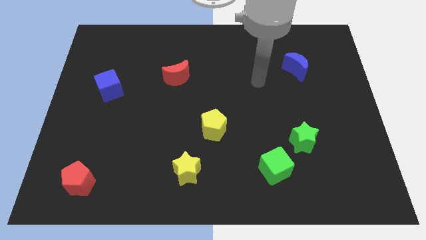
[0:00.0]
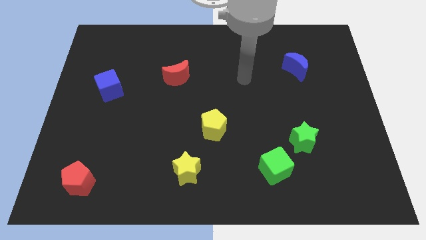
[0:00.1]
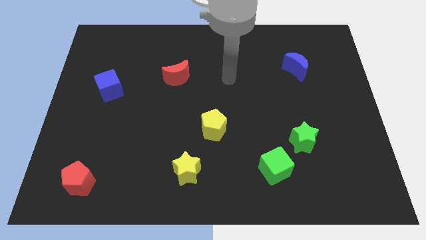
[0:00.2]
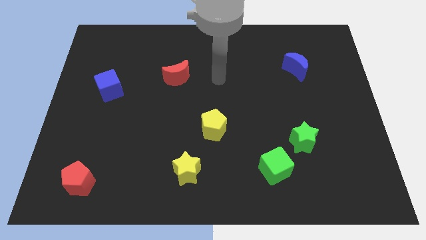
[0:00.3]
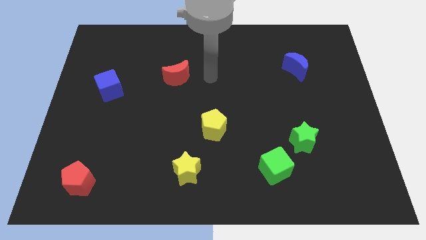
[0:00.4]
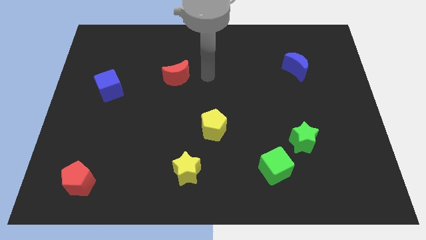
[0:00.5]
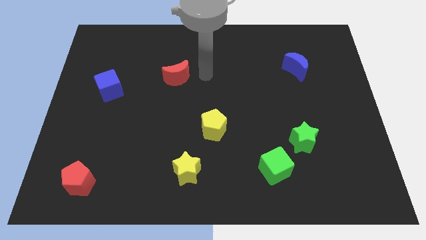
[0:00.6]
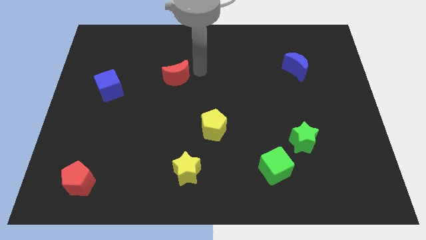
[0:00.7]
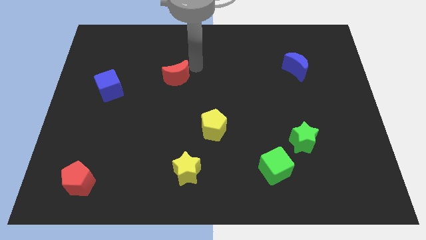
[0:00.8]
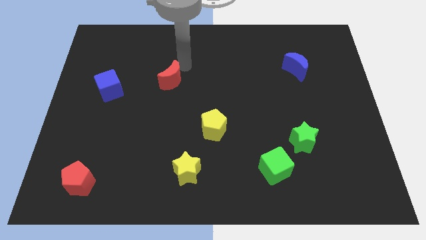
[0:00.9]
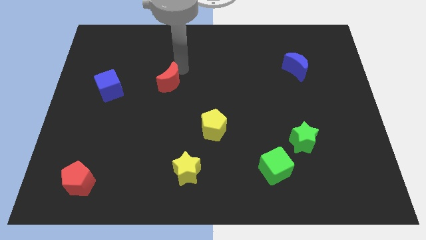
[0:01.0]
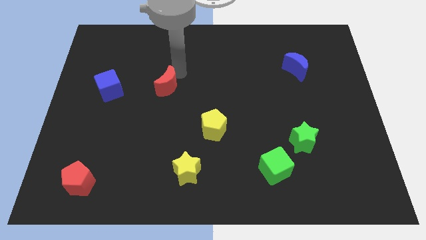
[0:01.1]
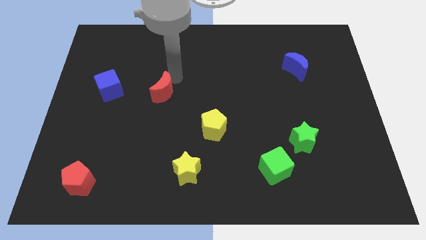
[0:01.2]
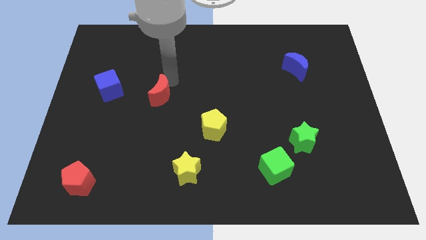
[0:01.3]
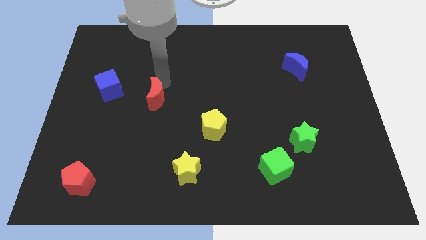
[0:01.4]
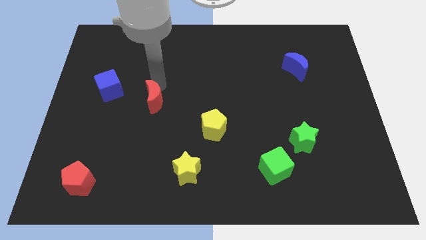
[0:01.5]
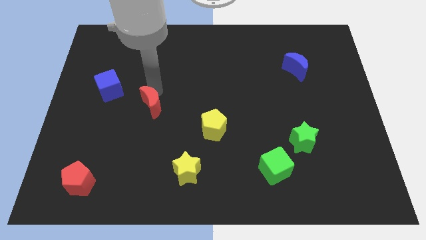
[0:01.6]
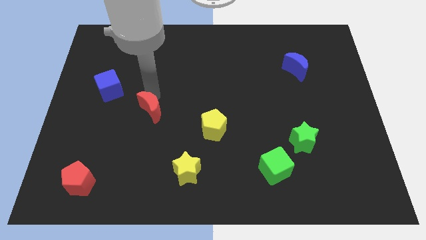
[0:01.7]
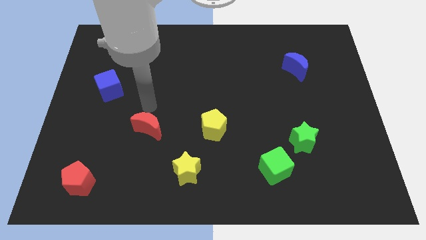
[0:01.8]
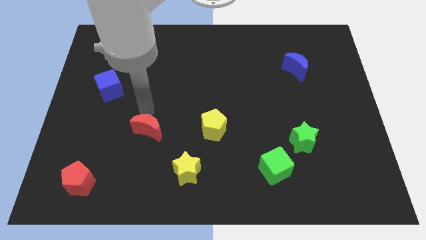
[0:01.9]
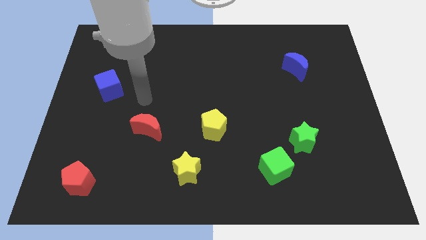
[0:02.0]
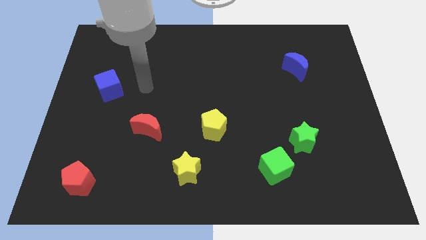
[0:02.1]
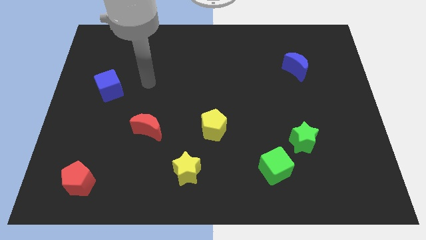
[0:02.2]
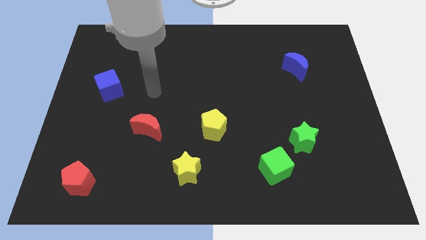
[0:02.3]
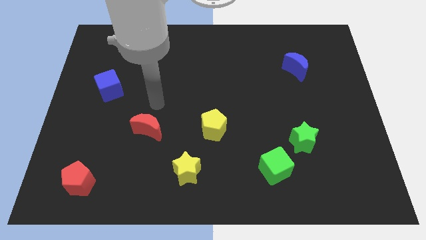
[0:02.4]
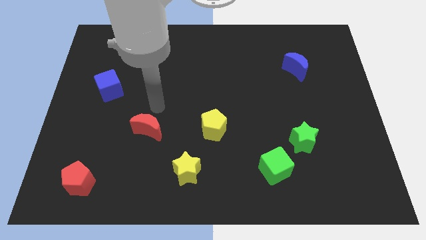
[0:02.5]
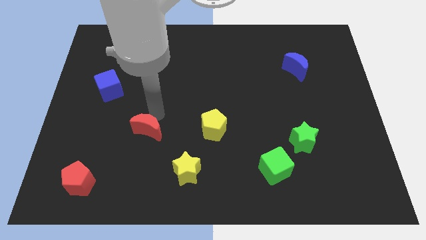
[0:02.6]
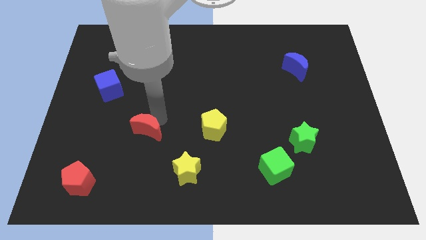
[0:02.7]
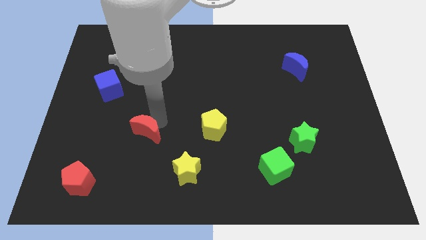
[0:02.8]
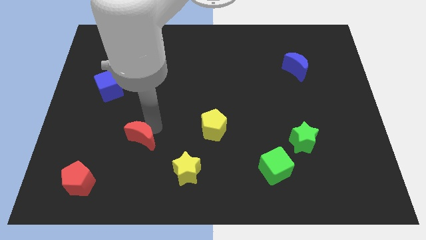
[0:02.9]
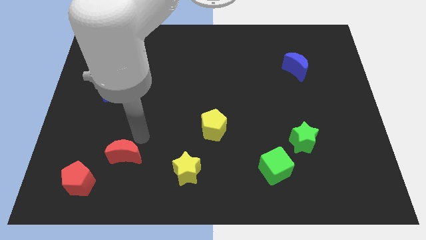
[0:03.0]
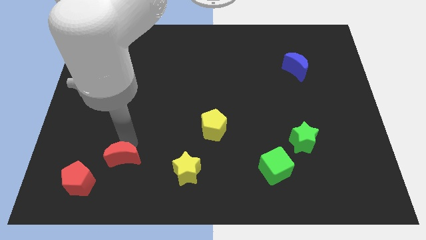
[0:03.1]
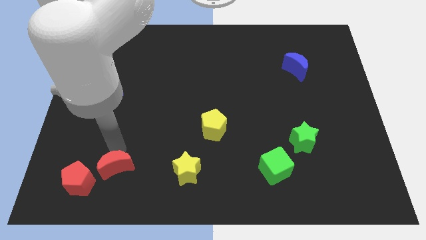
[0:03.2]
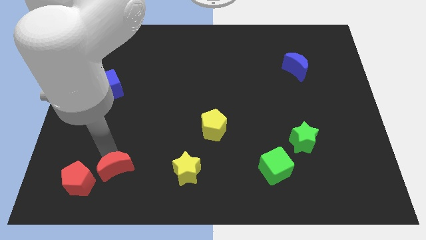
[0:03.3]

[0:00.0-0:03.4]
push the red crescent diagonally in between red pentagon and yellow pentagon

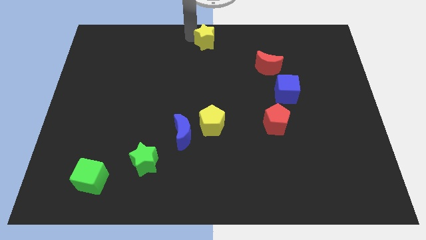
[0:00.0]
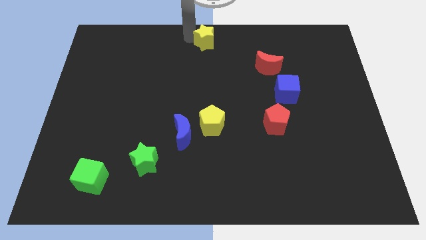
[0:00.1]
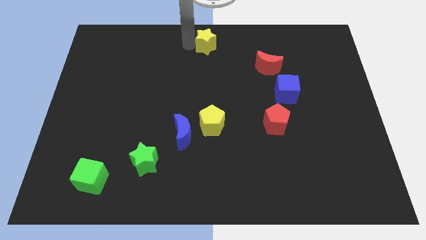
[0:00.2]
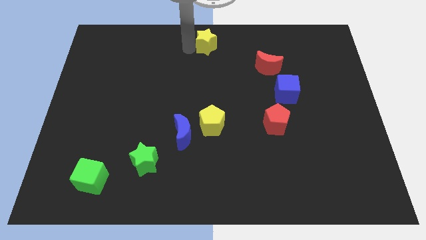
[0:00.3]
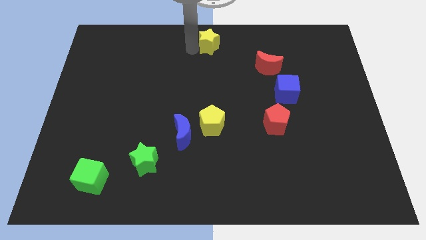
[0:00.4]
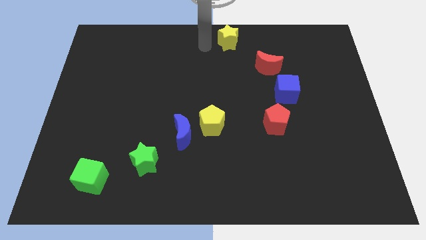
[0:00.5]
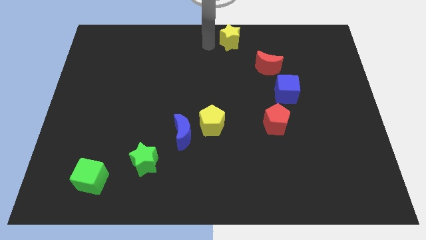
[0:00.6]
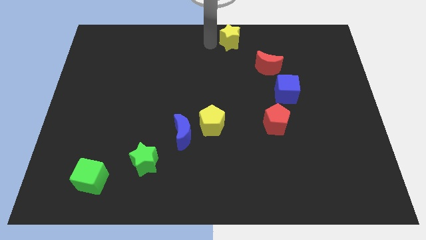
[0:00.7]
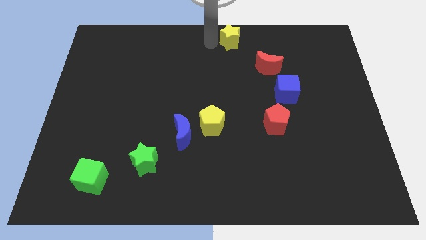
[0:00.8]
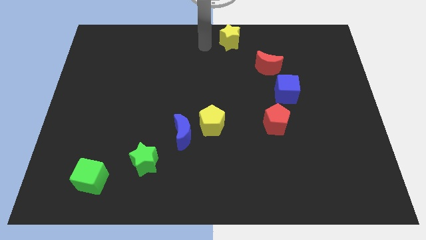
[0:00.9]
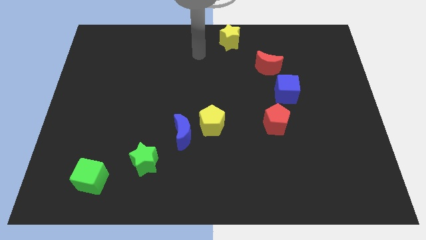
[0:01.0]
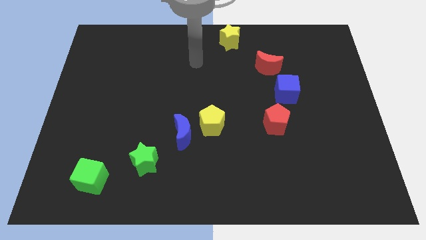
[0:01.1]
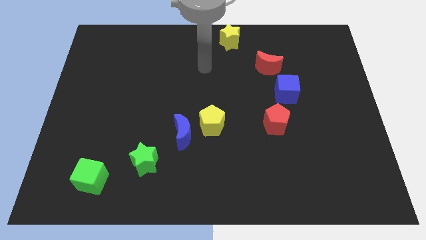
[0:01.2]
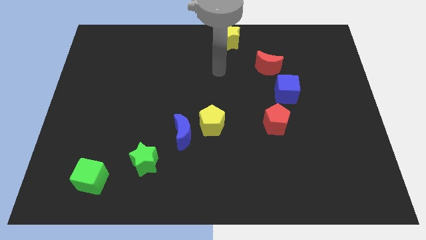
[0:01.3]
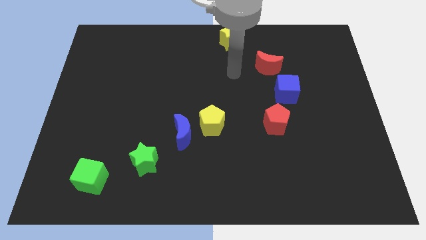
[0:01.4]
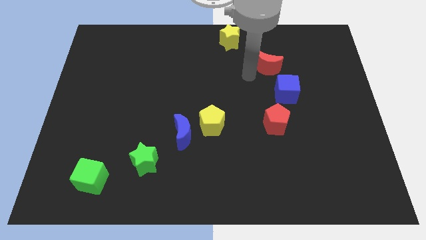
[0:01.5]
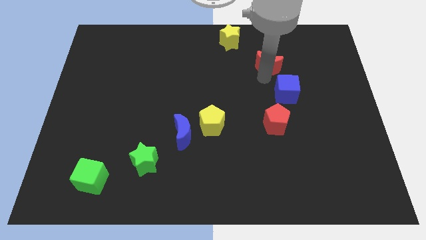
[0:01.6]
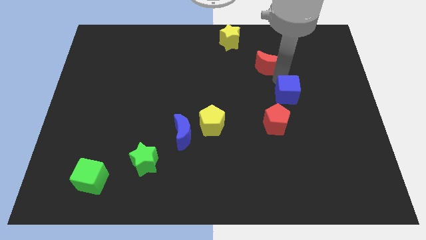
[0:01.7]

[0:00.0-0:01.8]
slide the yellow star diagonally top right to the yellow pentagon

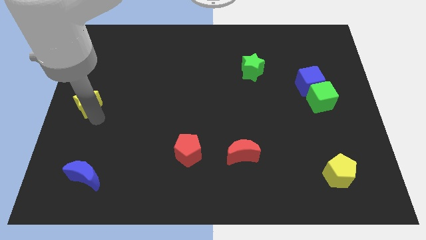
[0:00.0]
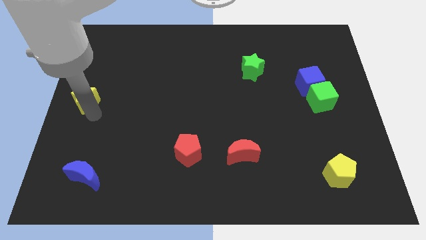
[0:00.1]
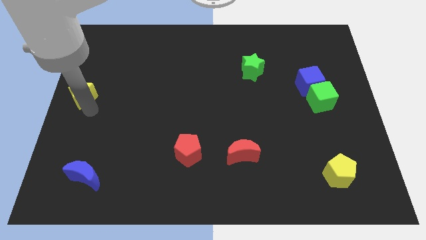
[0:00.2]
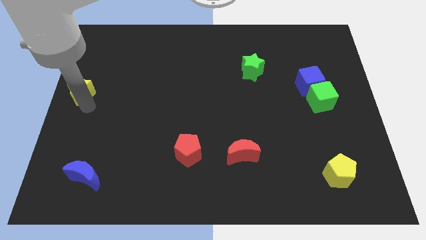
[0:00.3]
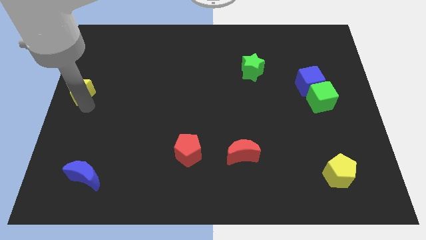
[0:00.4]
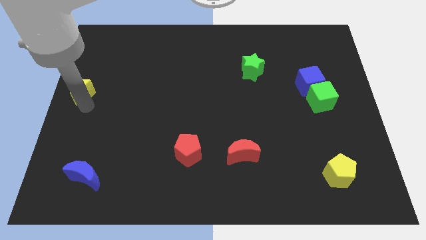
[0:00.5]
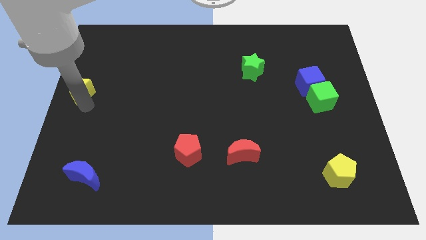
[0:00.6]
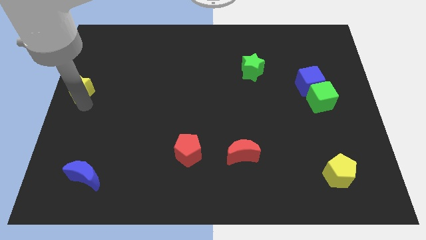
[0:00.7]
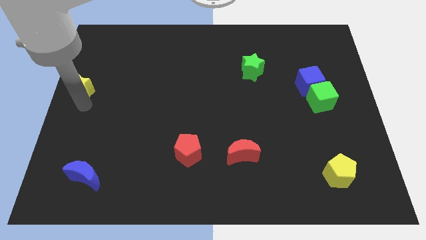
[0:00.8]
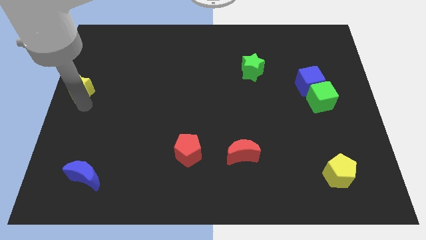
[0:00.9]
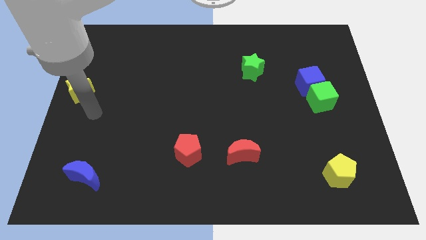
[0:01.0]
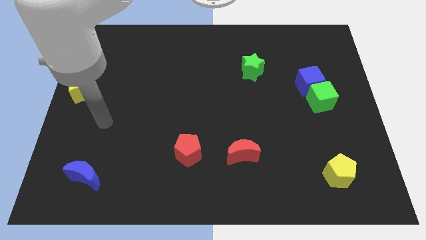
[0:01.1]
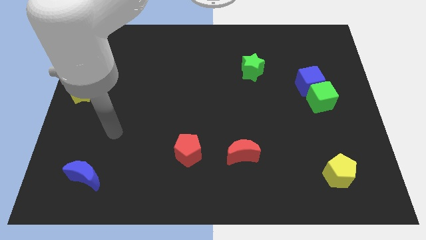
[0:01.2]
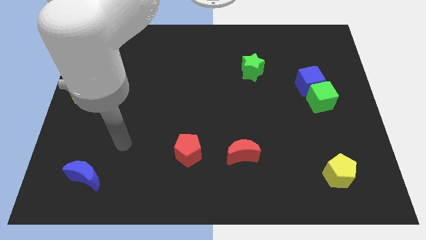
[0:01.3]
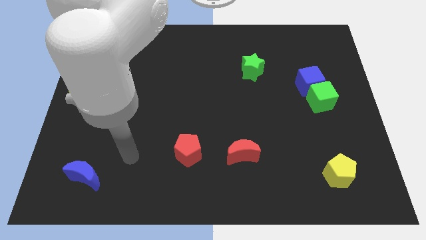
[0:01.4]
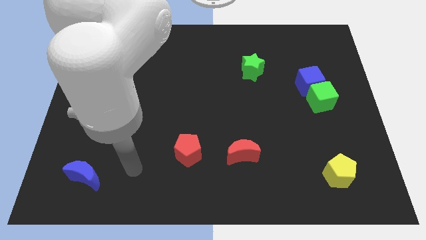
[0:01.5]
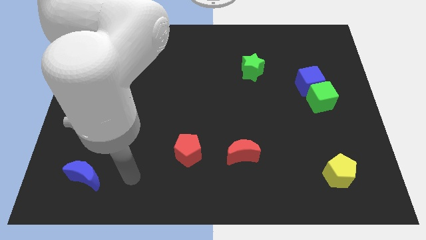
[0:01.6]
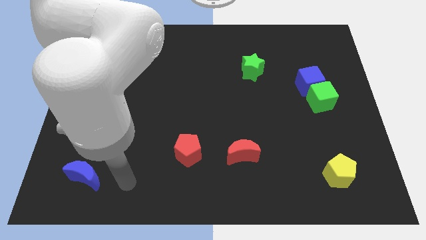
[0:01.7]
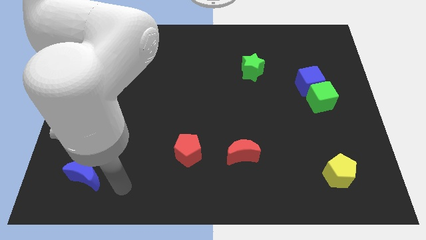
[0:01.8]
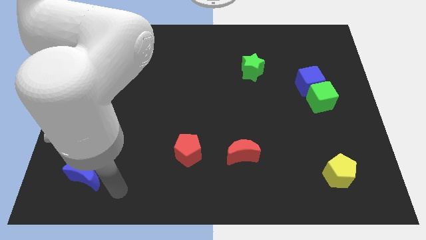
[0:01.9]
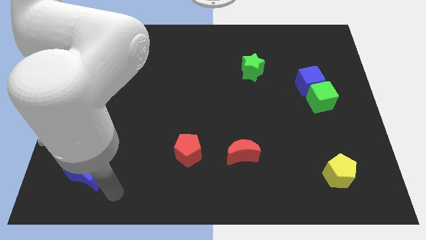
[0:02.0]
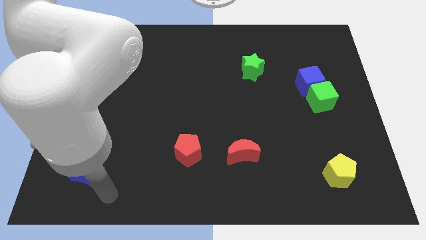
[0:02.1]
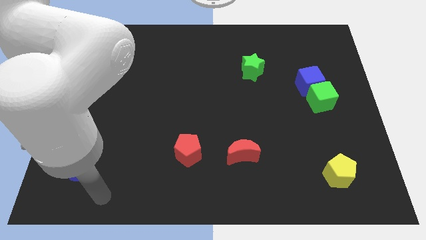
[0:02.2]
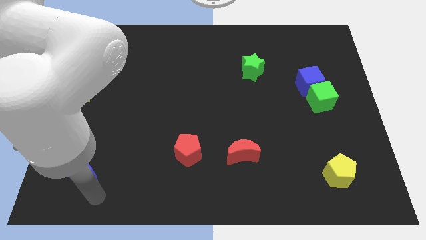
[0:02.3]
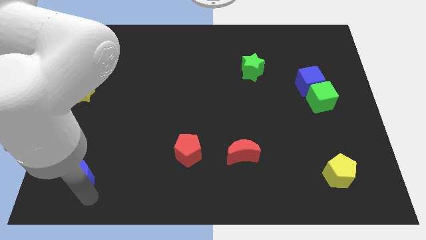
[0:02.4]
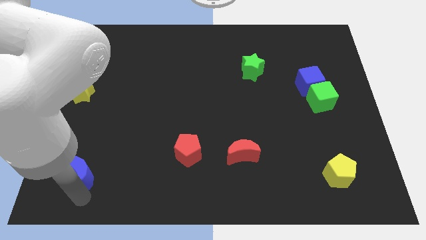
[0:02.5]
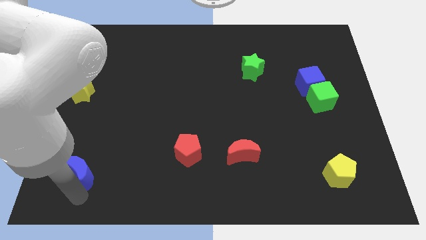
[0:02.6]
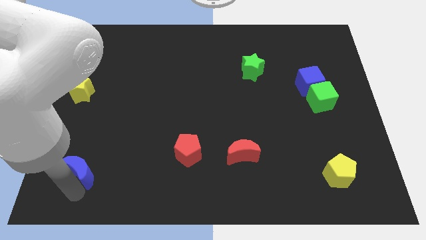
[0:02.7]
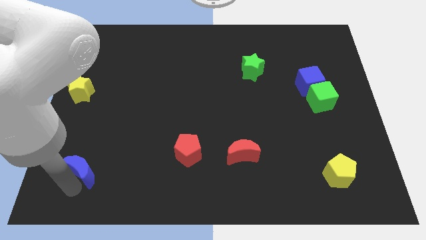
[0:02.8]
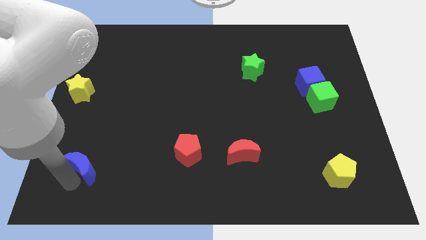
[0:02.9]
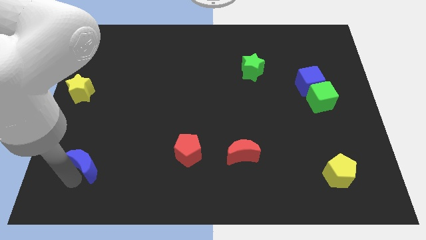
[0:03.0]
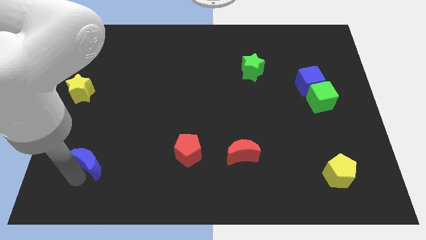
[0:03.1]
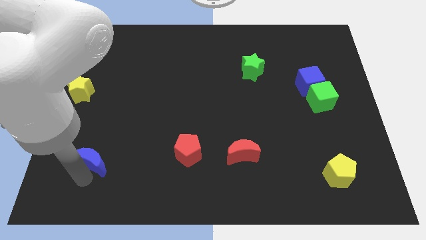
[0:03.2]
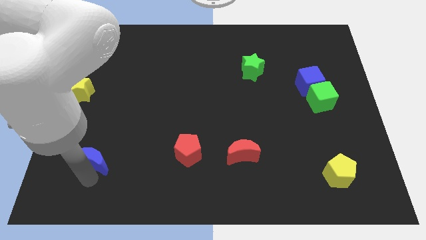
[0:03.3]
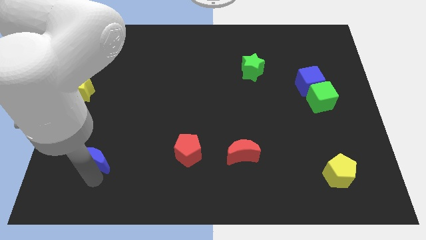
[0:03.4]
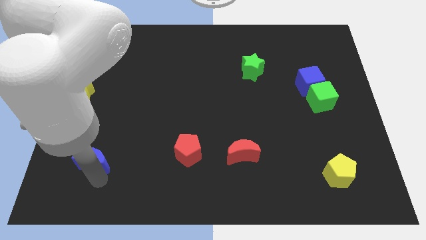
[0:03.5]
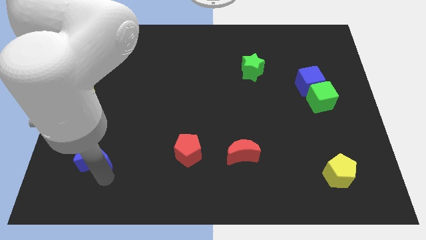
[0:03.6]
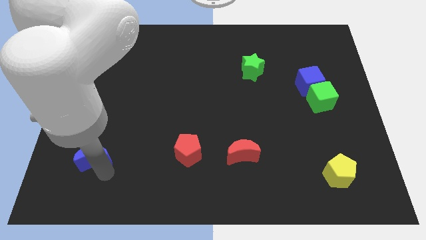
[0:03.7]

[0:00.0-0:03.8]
place the blue moon adjacent to the red pentagon

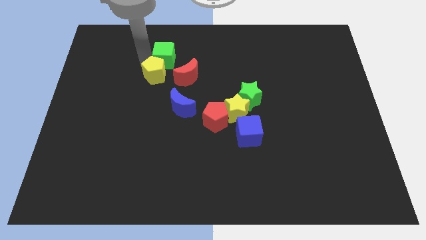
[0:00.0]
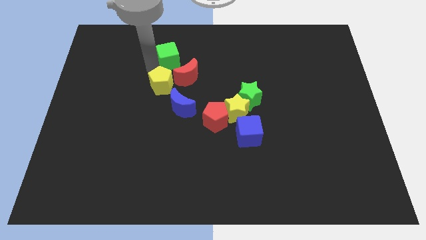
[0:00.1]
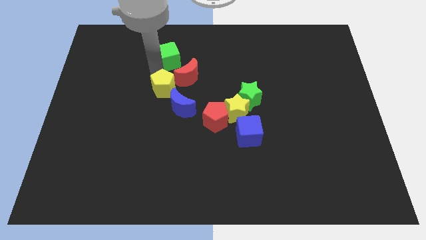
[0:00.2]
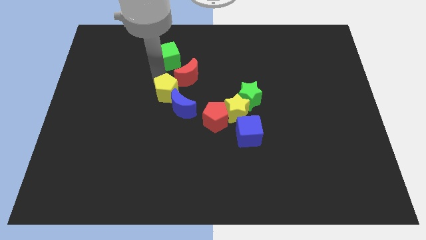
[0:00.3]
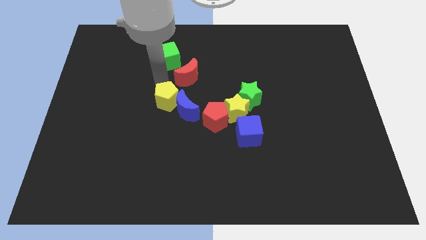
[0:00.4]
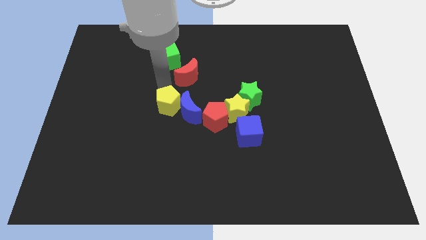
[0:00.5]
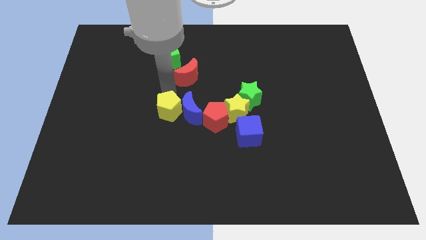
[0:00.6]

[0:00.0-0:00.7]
push the yellow pentagon to the left of the blue crescent
